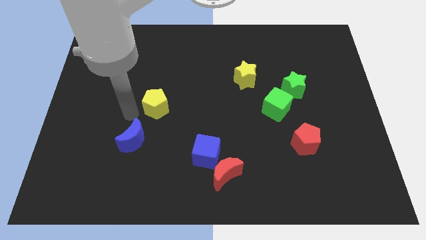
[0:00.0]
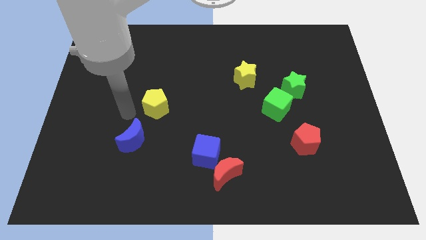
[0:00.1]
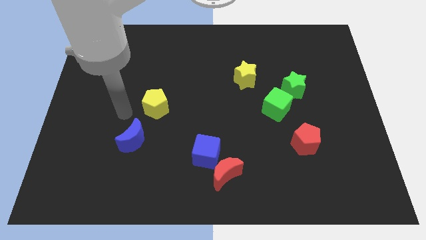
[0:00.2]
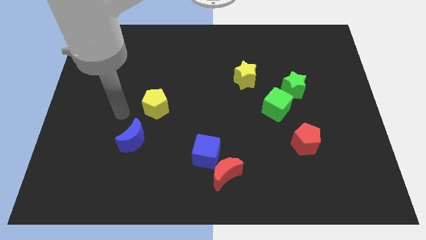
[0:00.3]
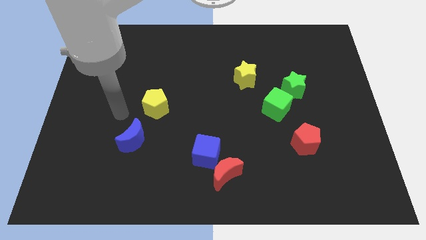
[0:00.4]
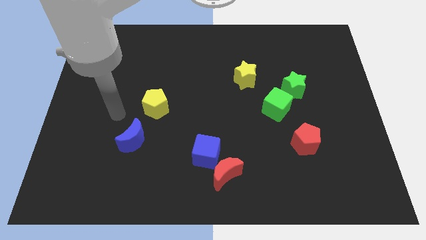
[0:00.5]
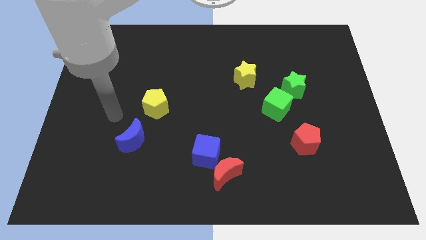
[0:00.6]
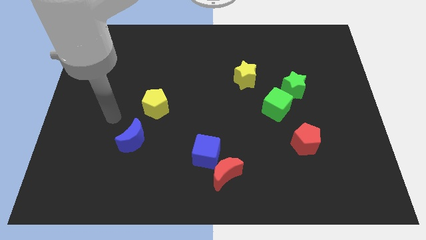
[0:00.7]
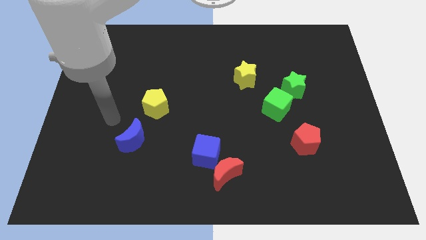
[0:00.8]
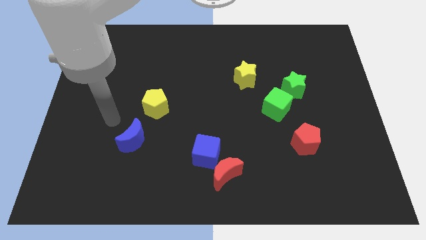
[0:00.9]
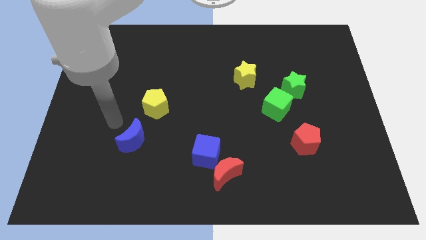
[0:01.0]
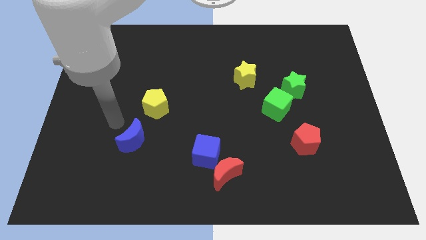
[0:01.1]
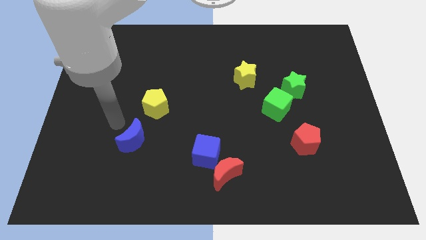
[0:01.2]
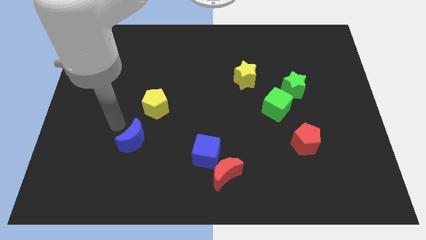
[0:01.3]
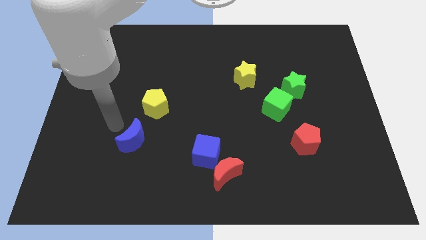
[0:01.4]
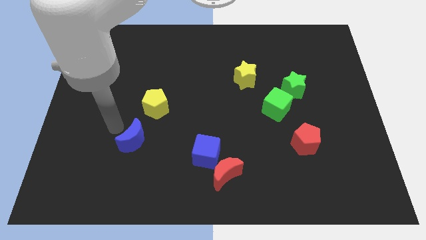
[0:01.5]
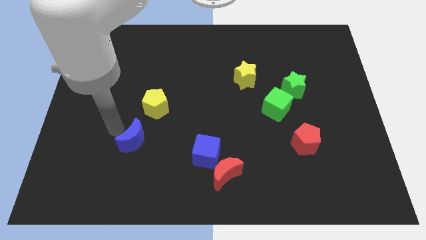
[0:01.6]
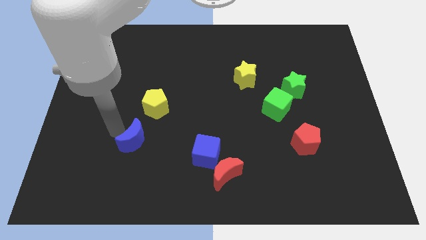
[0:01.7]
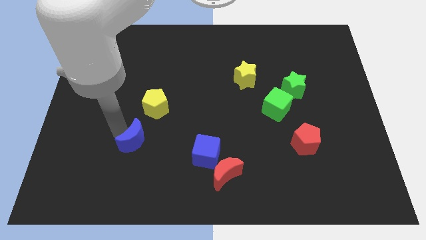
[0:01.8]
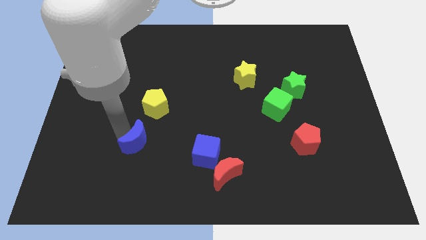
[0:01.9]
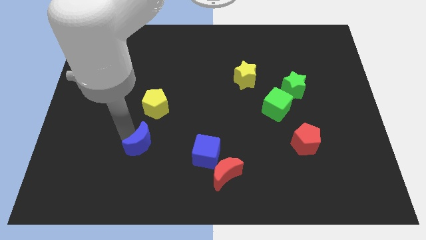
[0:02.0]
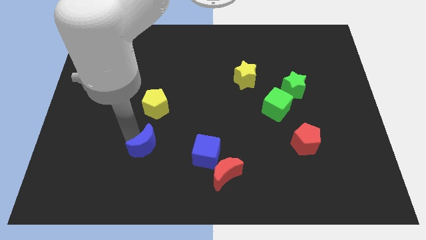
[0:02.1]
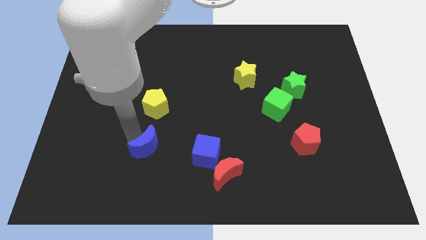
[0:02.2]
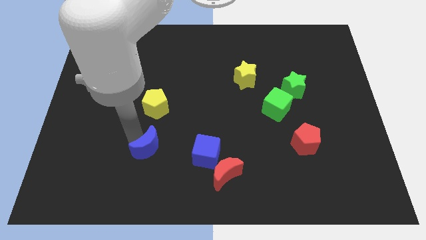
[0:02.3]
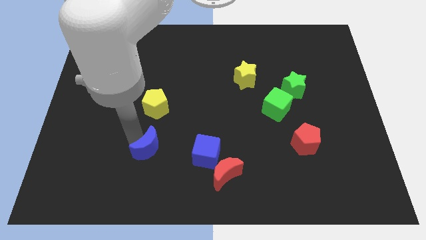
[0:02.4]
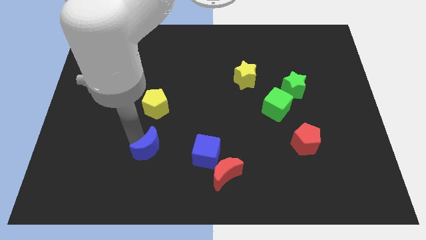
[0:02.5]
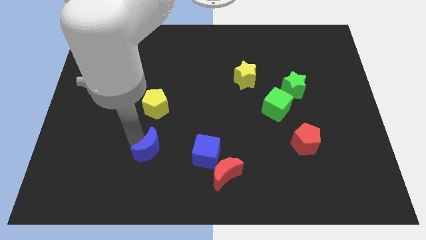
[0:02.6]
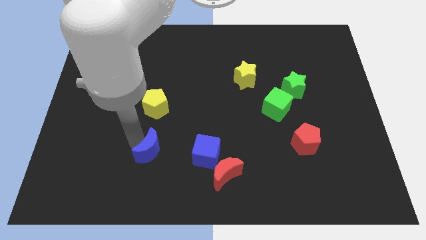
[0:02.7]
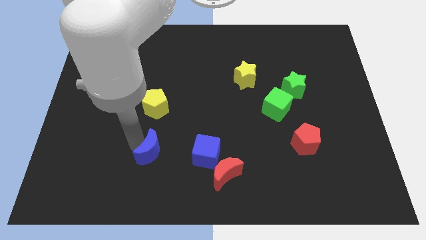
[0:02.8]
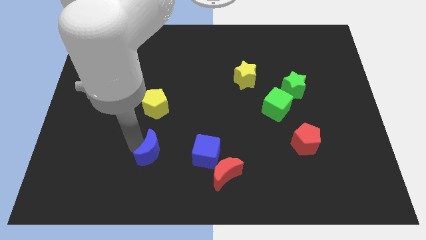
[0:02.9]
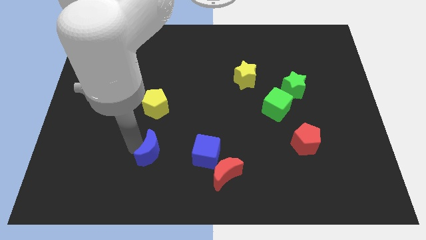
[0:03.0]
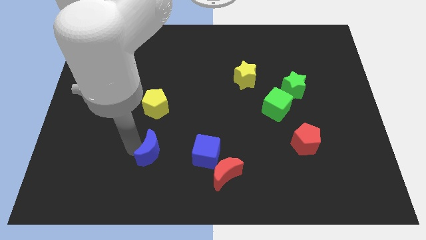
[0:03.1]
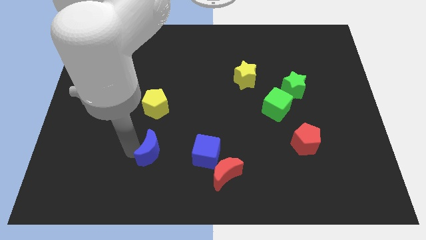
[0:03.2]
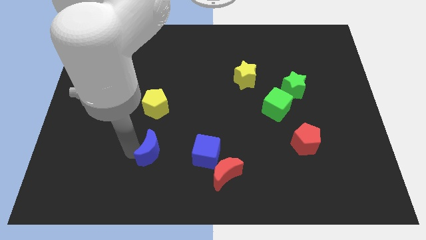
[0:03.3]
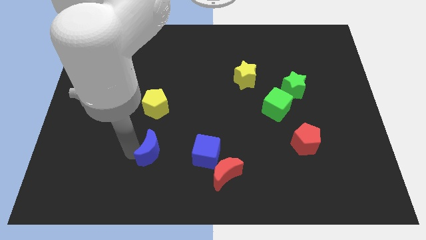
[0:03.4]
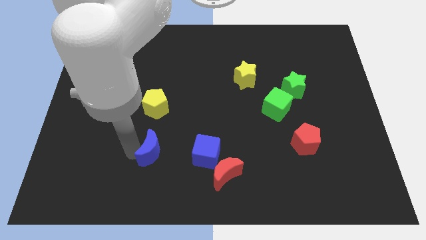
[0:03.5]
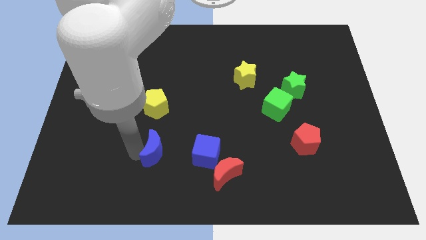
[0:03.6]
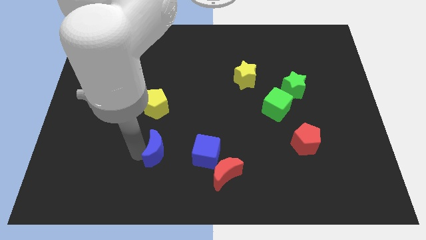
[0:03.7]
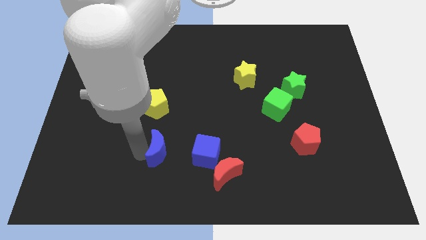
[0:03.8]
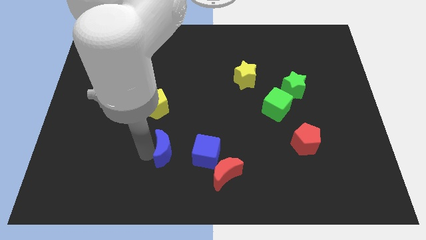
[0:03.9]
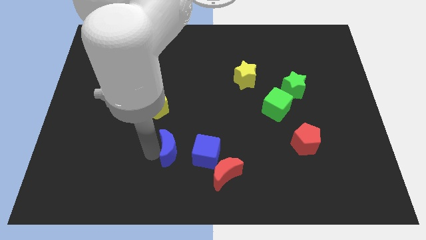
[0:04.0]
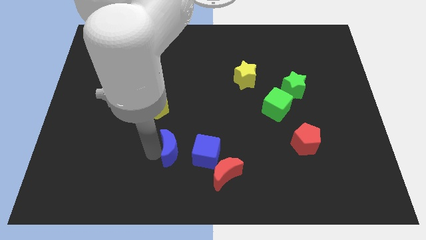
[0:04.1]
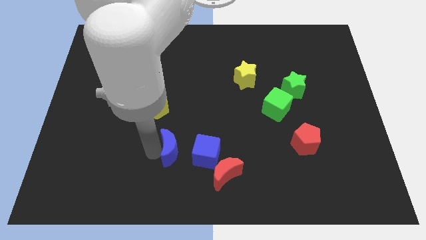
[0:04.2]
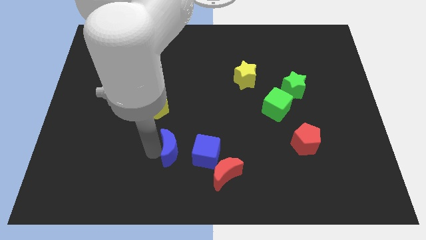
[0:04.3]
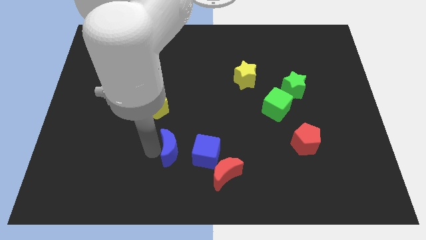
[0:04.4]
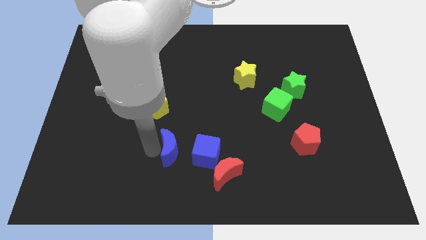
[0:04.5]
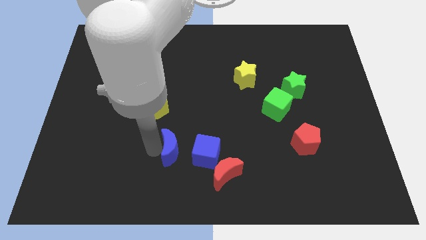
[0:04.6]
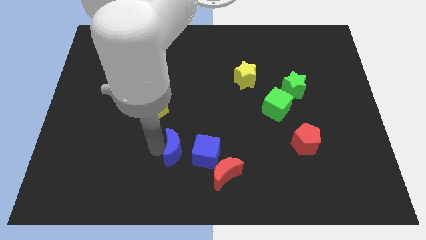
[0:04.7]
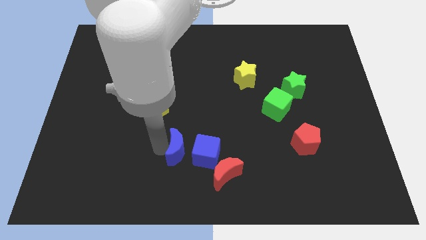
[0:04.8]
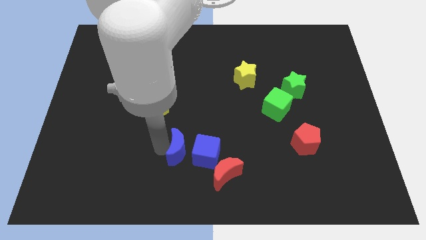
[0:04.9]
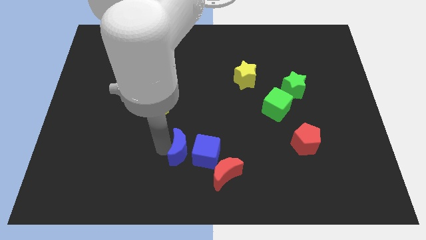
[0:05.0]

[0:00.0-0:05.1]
place blue moon to left of blue cube

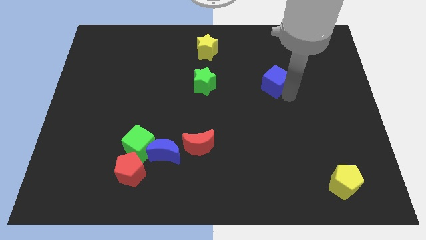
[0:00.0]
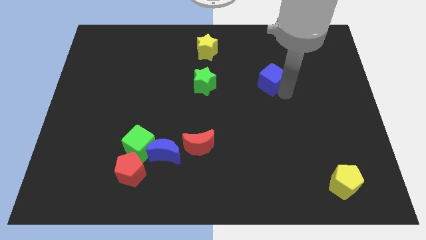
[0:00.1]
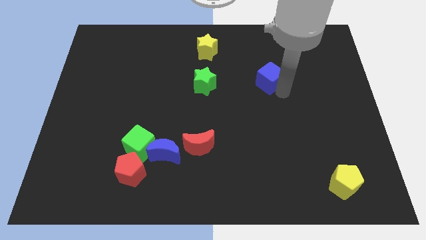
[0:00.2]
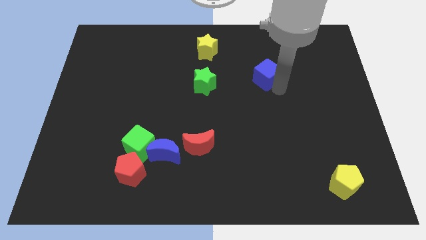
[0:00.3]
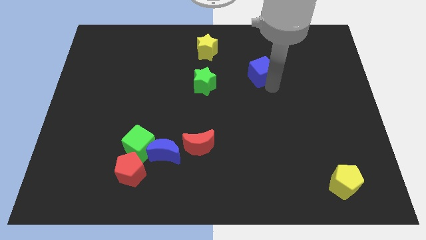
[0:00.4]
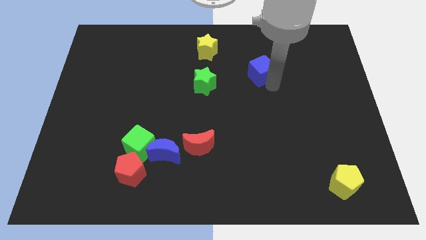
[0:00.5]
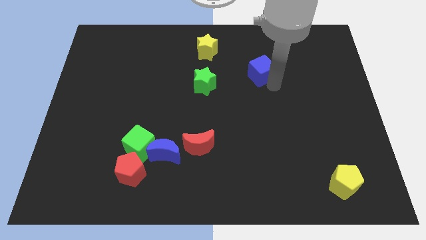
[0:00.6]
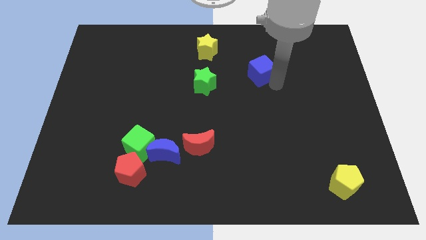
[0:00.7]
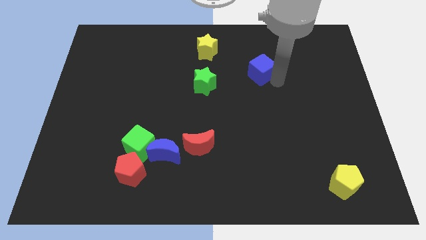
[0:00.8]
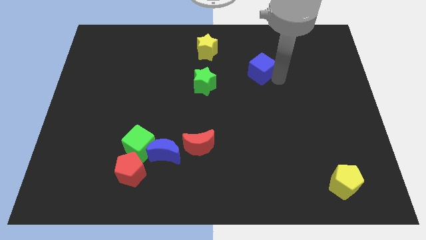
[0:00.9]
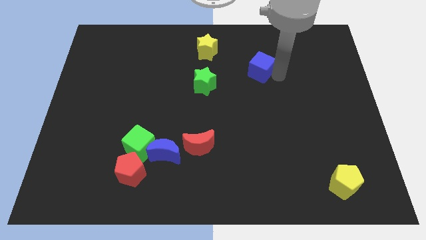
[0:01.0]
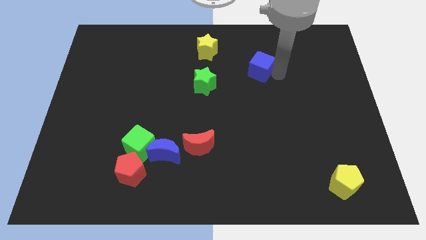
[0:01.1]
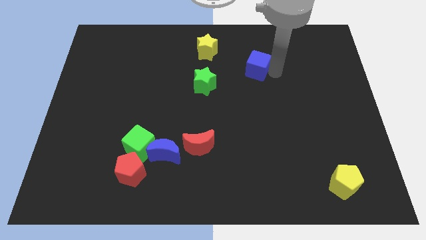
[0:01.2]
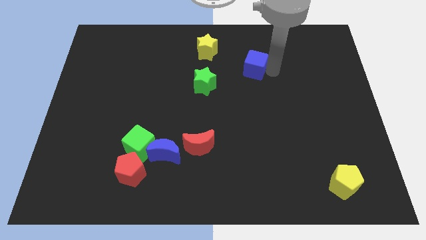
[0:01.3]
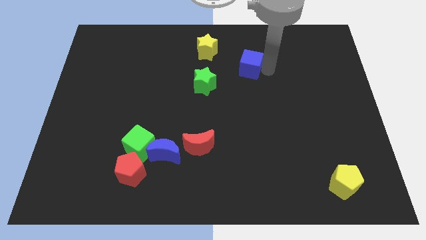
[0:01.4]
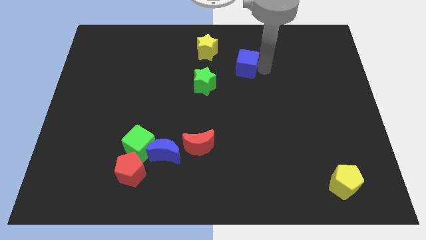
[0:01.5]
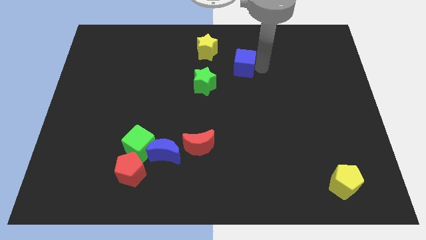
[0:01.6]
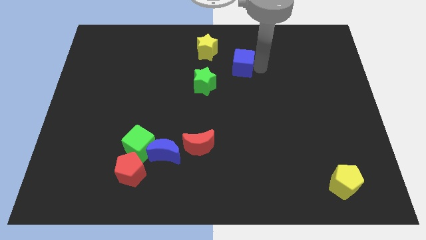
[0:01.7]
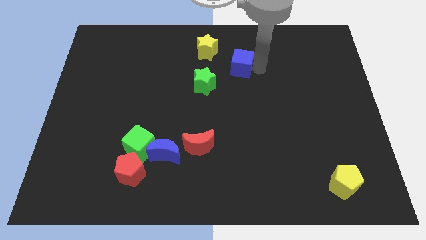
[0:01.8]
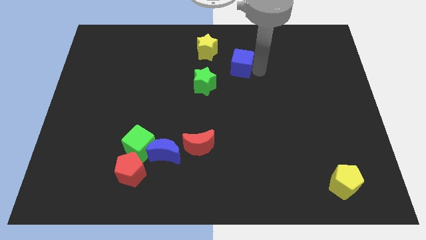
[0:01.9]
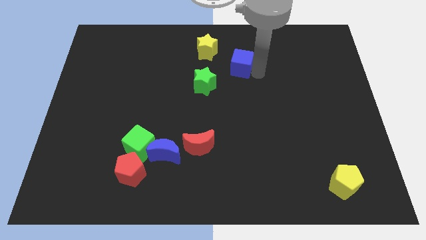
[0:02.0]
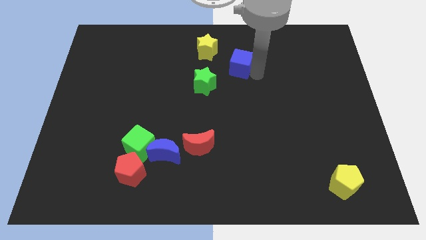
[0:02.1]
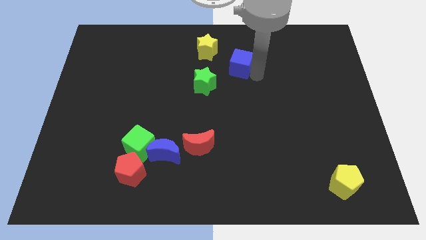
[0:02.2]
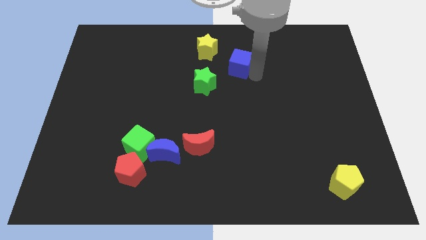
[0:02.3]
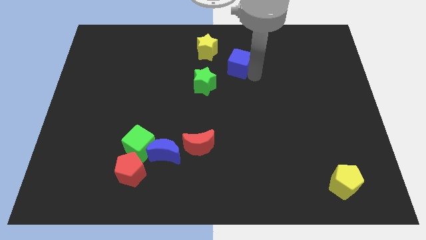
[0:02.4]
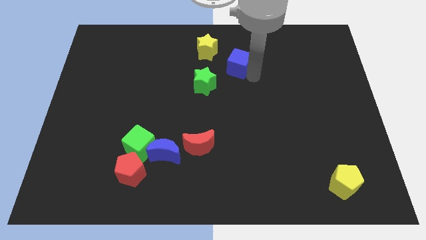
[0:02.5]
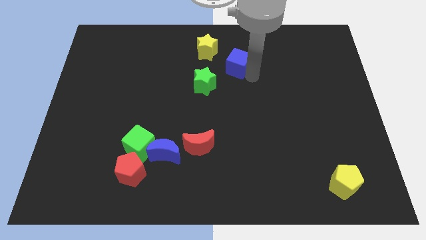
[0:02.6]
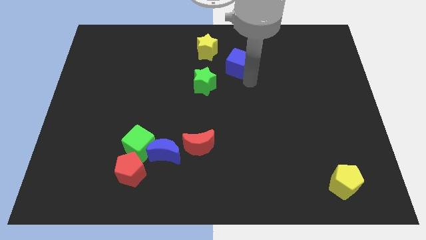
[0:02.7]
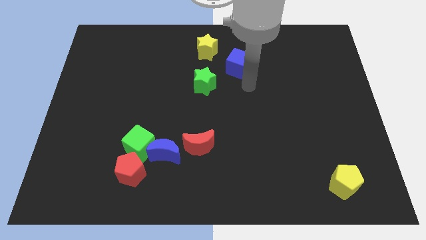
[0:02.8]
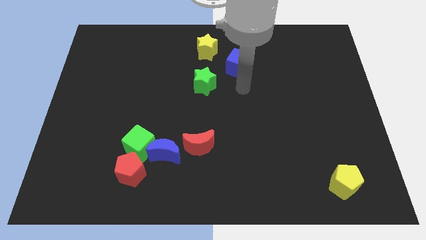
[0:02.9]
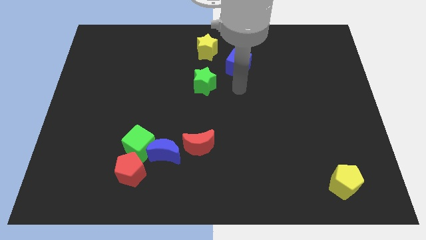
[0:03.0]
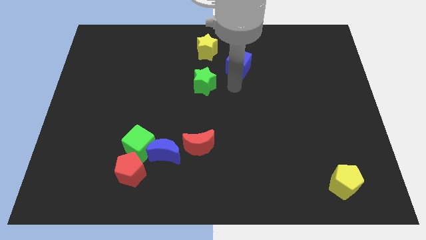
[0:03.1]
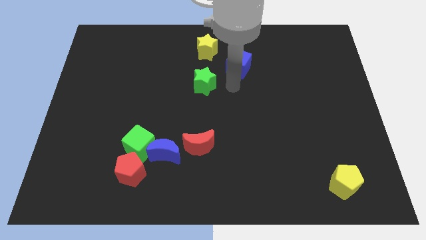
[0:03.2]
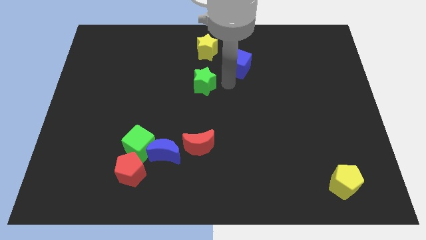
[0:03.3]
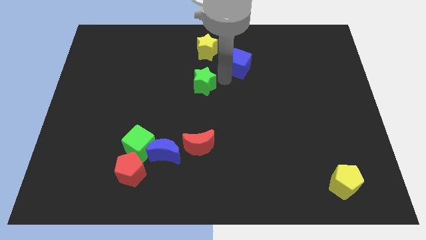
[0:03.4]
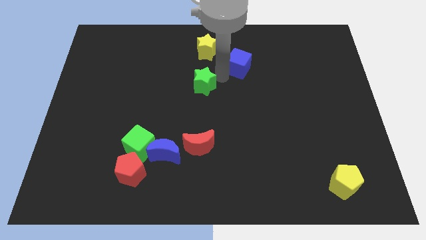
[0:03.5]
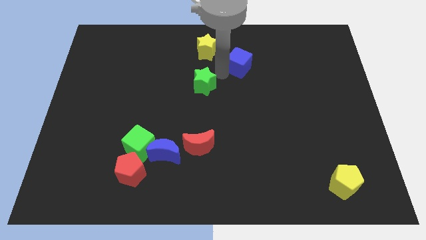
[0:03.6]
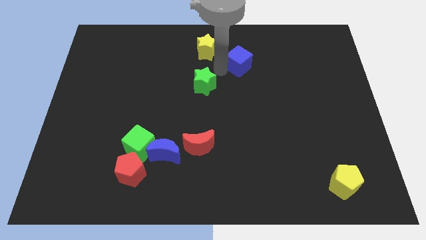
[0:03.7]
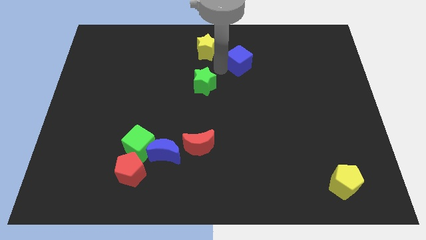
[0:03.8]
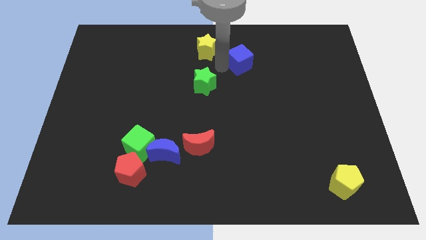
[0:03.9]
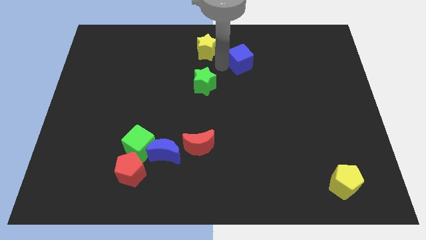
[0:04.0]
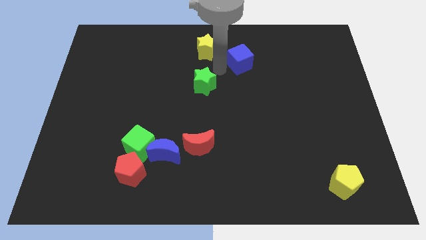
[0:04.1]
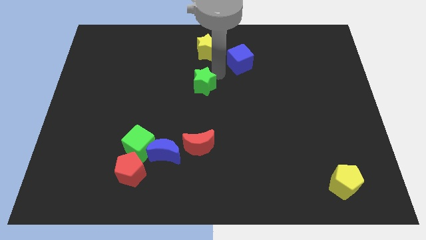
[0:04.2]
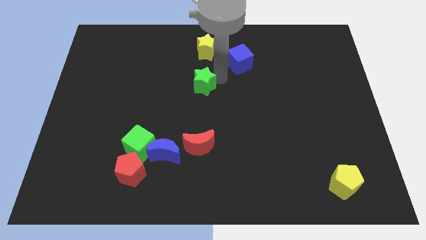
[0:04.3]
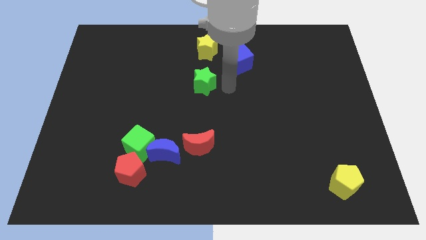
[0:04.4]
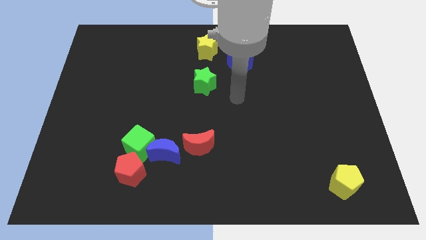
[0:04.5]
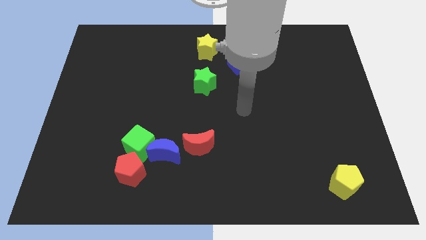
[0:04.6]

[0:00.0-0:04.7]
move blue cube towards yellow star
